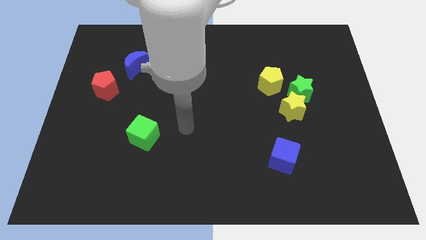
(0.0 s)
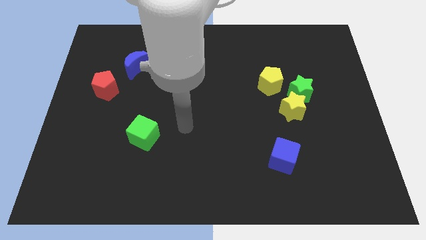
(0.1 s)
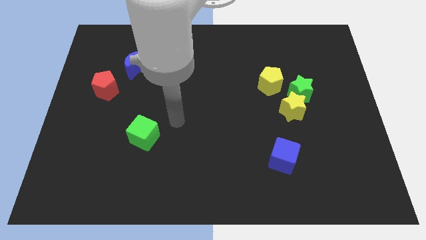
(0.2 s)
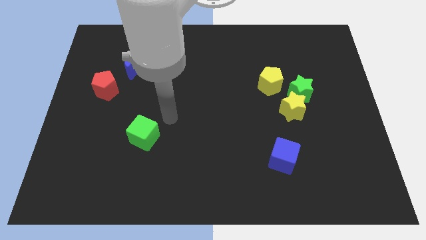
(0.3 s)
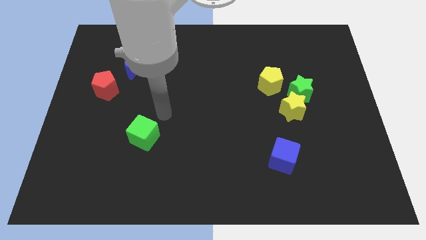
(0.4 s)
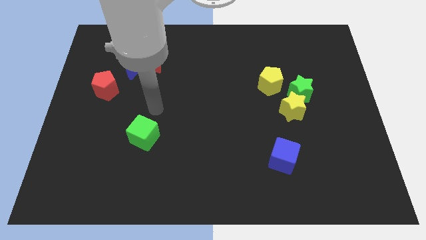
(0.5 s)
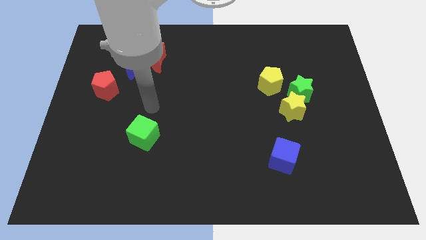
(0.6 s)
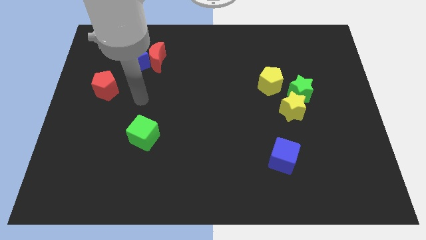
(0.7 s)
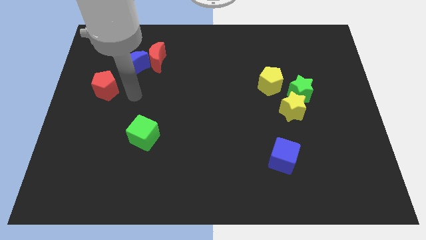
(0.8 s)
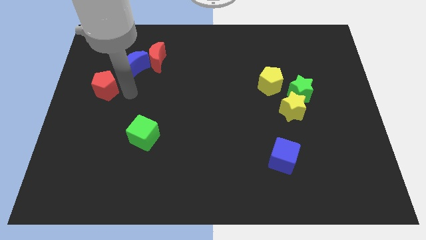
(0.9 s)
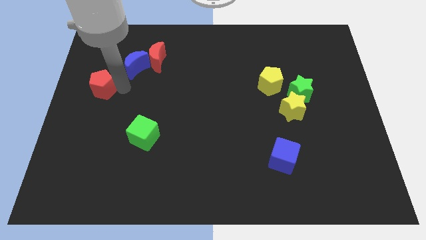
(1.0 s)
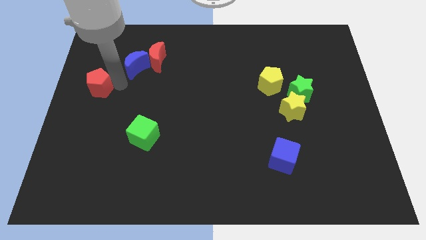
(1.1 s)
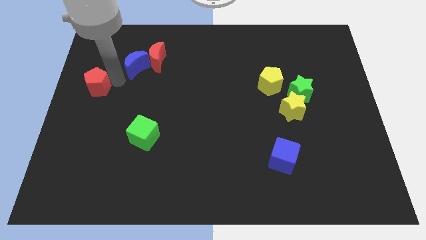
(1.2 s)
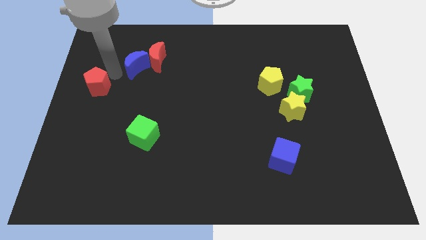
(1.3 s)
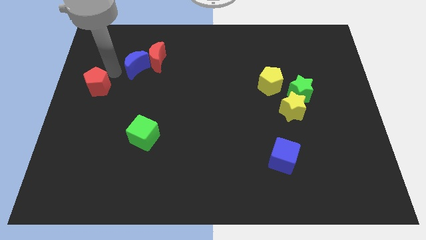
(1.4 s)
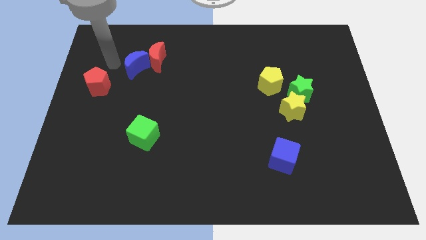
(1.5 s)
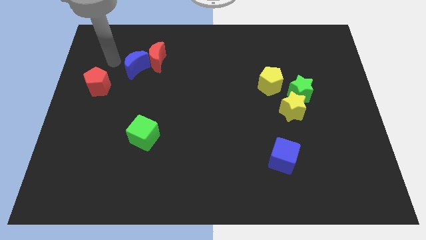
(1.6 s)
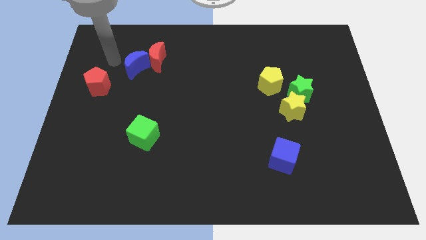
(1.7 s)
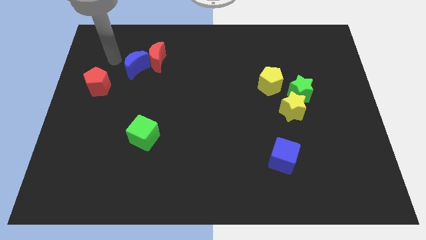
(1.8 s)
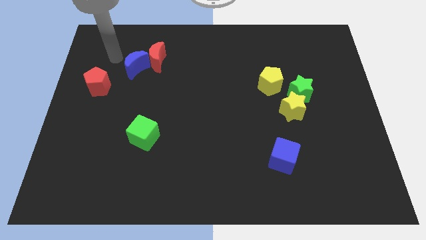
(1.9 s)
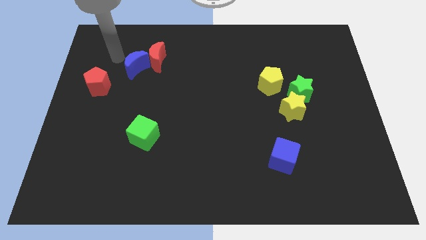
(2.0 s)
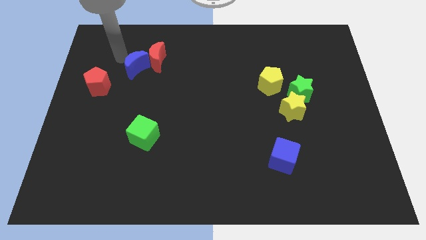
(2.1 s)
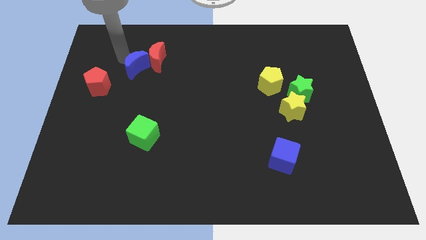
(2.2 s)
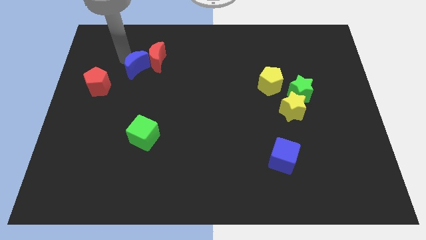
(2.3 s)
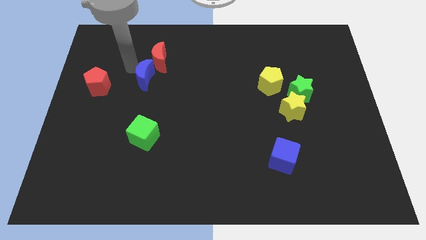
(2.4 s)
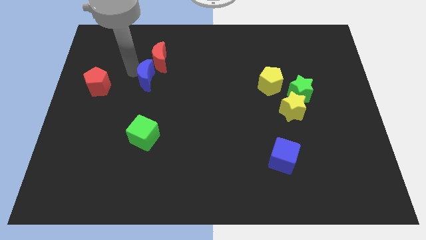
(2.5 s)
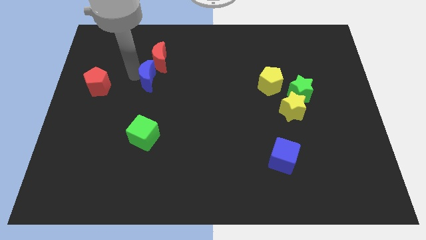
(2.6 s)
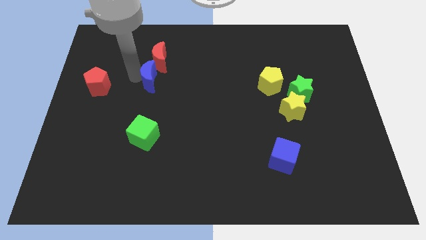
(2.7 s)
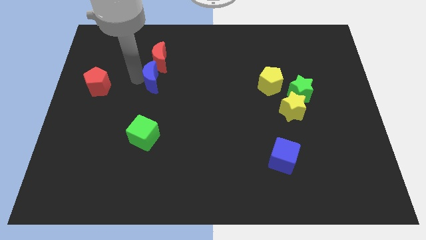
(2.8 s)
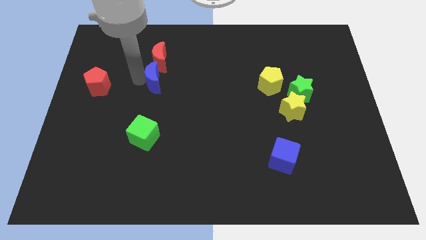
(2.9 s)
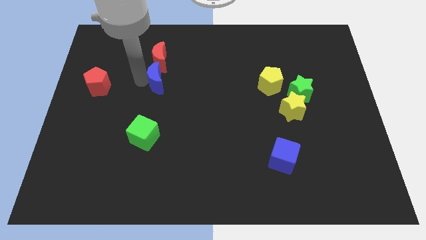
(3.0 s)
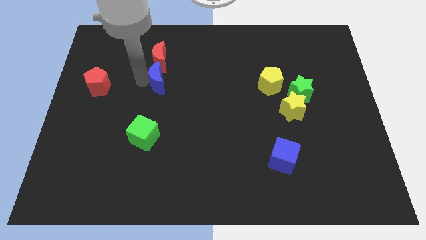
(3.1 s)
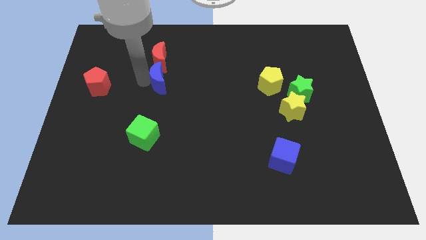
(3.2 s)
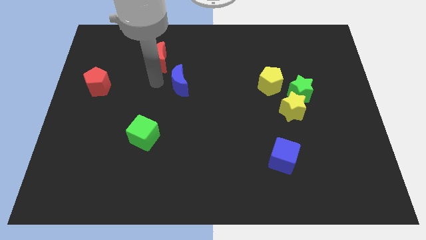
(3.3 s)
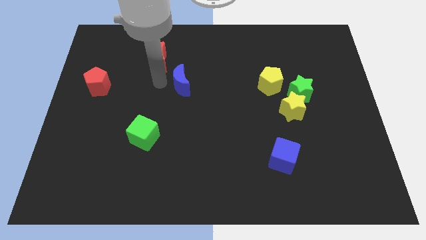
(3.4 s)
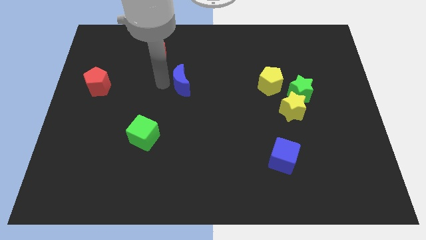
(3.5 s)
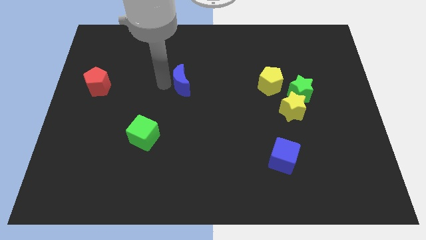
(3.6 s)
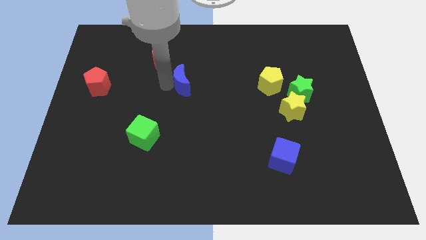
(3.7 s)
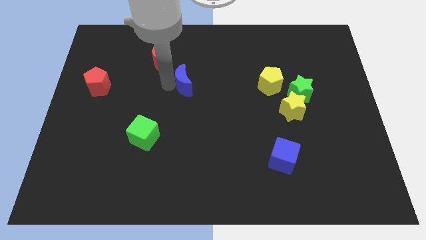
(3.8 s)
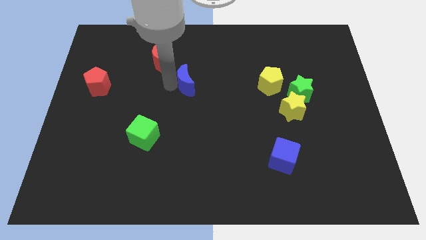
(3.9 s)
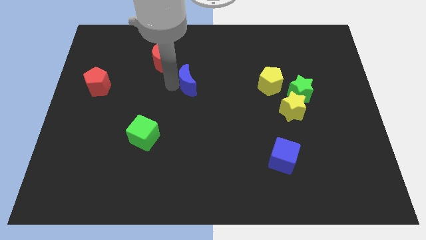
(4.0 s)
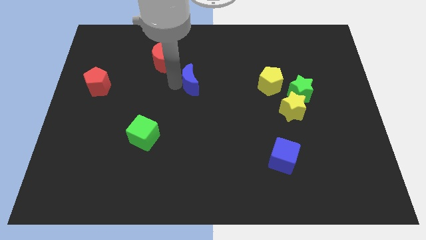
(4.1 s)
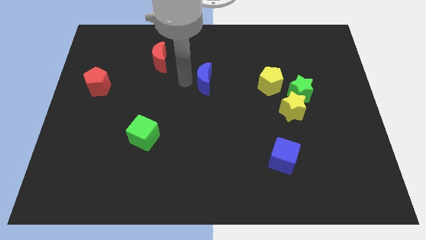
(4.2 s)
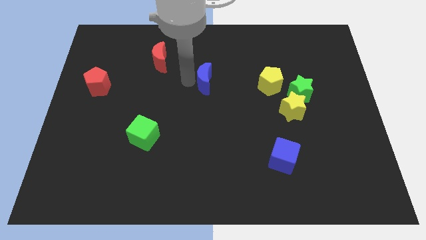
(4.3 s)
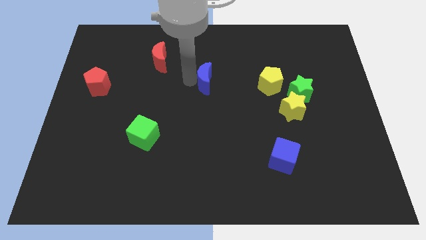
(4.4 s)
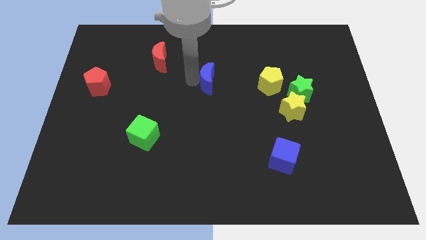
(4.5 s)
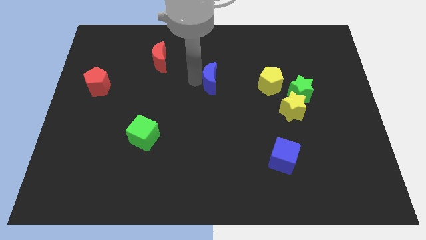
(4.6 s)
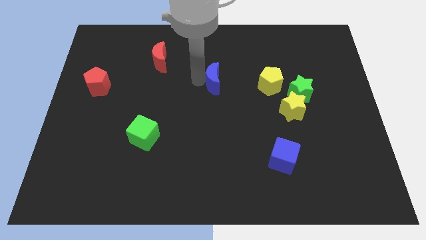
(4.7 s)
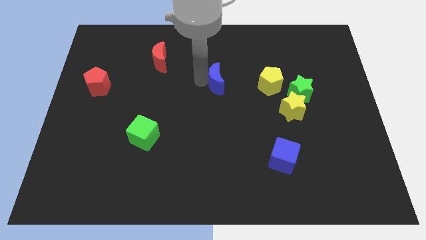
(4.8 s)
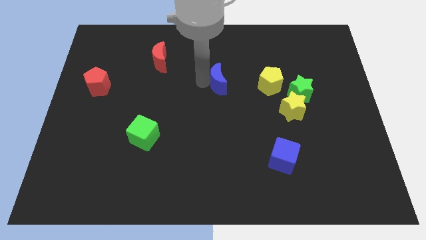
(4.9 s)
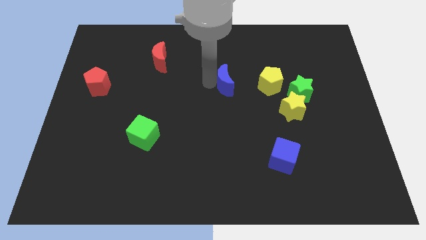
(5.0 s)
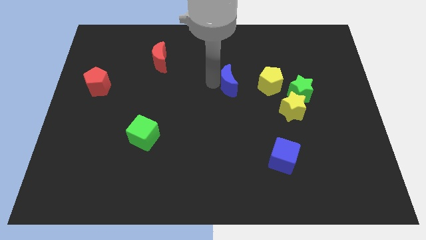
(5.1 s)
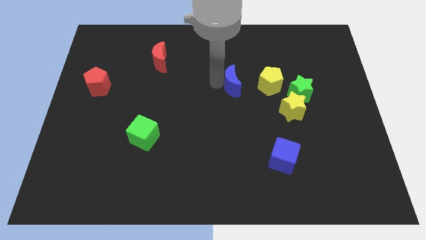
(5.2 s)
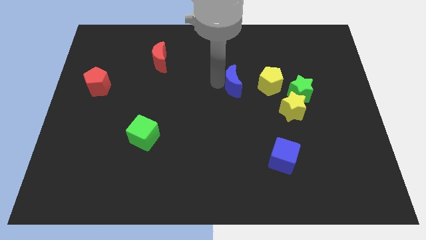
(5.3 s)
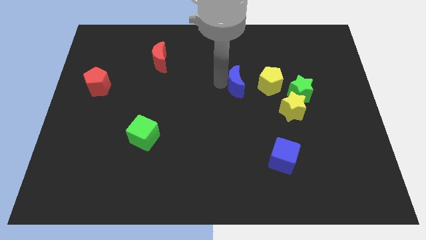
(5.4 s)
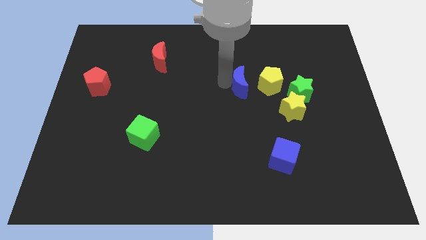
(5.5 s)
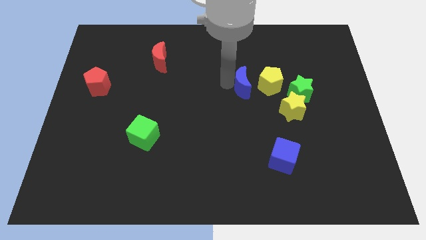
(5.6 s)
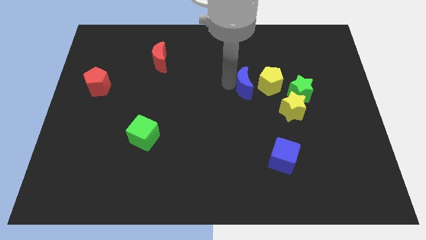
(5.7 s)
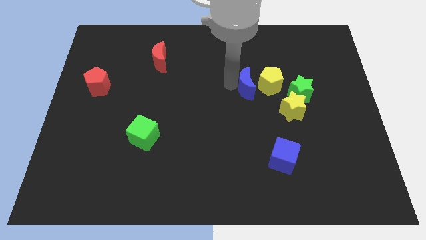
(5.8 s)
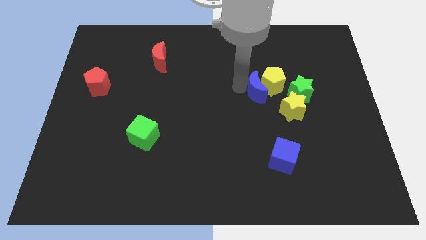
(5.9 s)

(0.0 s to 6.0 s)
move the blue moon next to the yellow pentagon

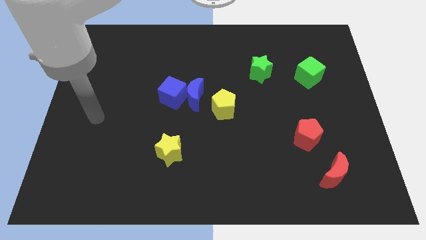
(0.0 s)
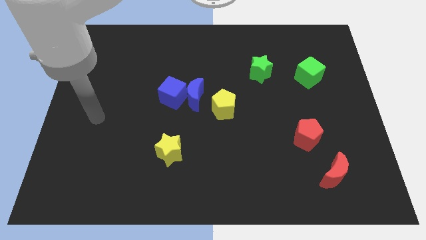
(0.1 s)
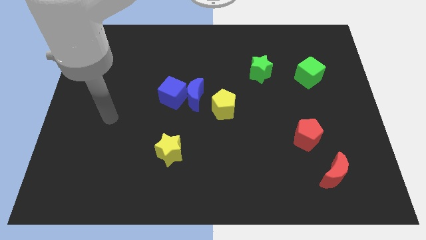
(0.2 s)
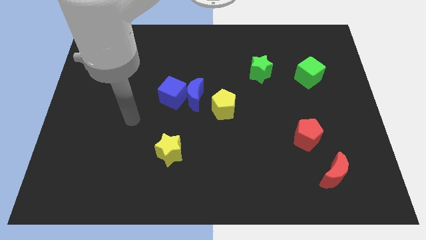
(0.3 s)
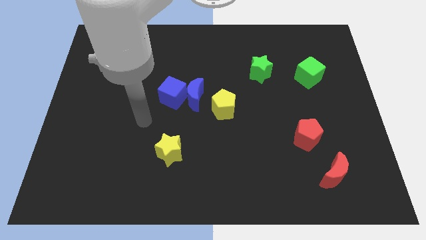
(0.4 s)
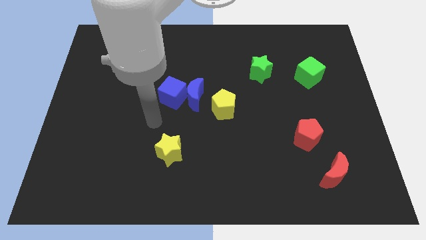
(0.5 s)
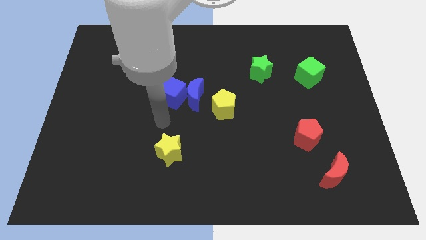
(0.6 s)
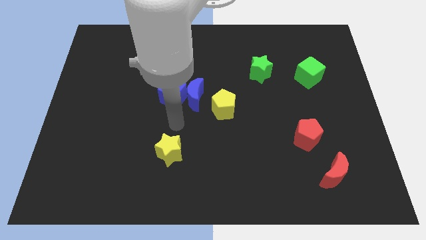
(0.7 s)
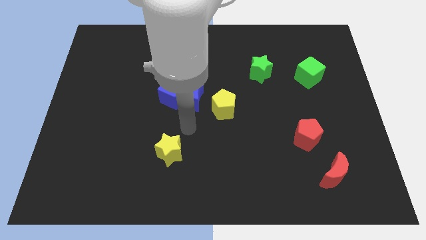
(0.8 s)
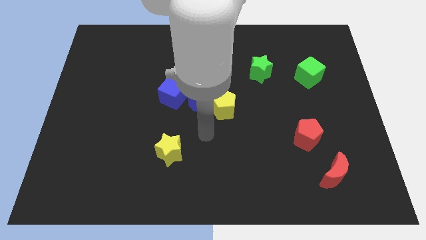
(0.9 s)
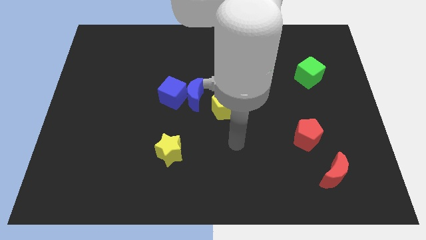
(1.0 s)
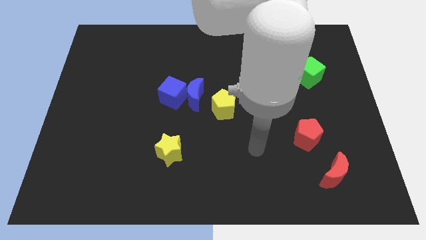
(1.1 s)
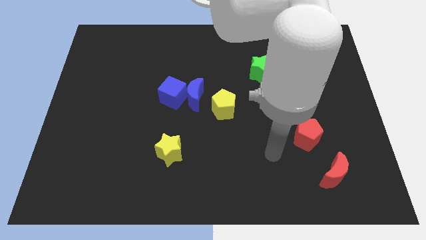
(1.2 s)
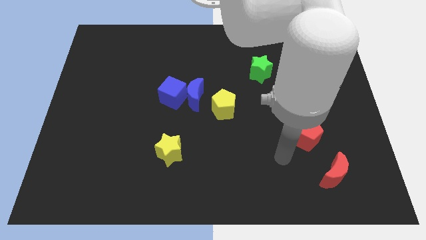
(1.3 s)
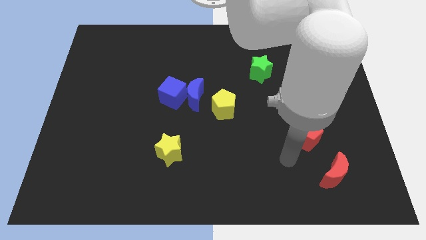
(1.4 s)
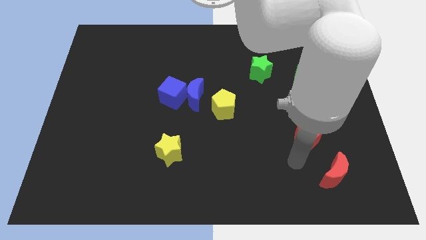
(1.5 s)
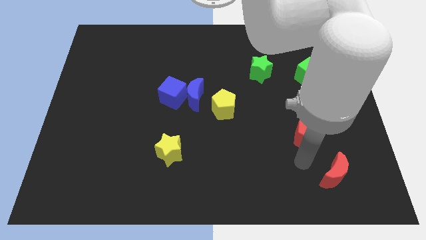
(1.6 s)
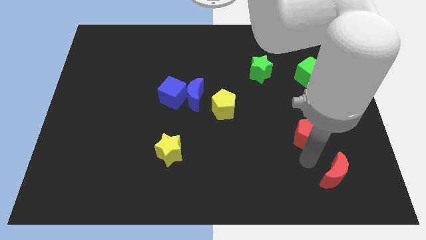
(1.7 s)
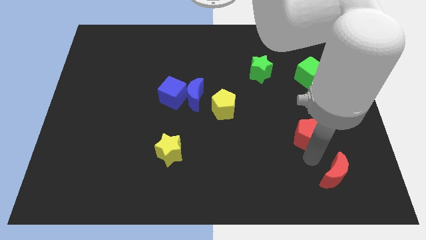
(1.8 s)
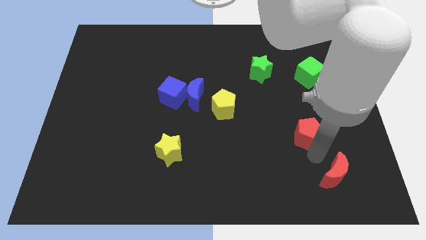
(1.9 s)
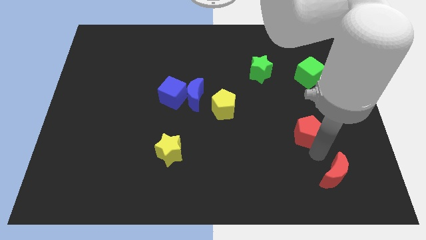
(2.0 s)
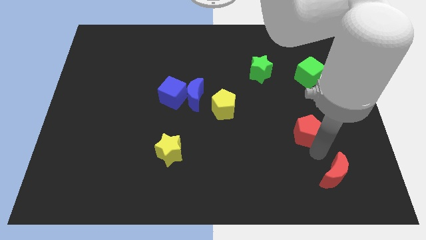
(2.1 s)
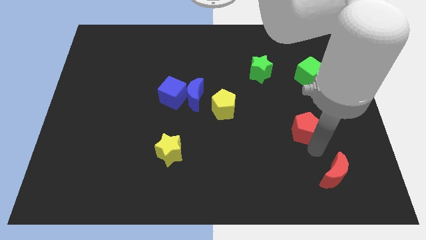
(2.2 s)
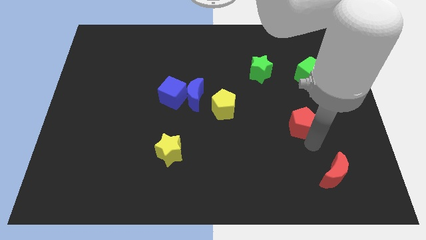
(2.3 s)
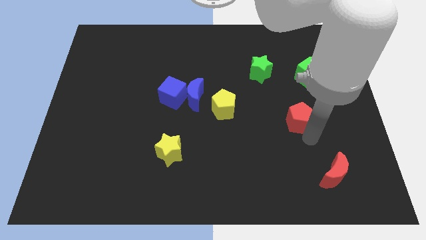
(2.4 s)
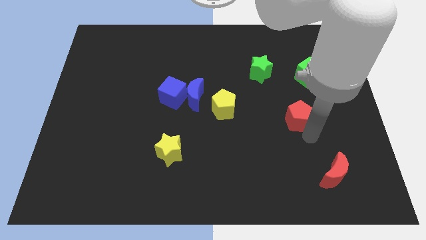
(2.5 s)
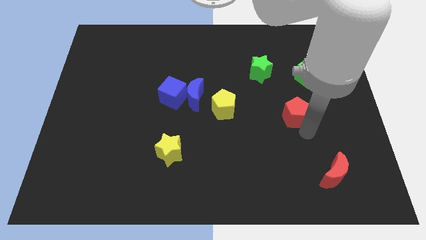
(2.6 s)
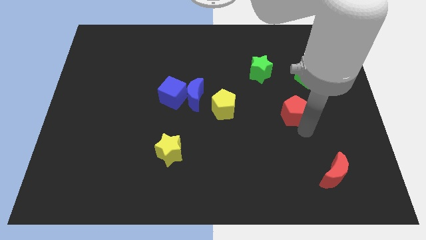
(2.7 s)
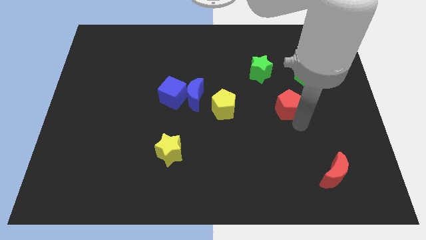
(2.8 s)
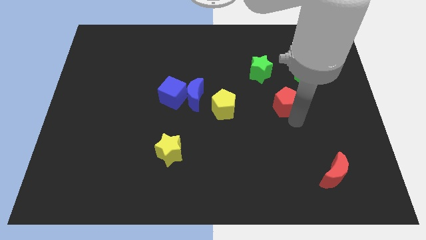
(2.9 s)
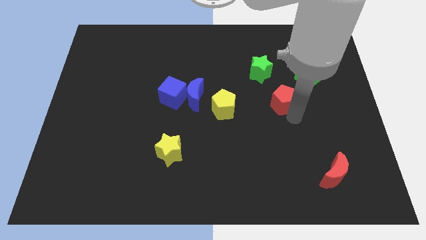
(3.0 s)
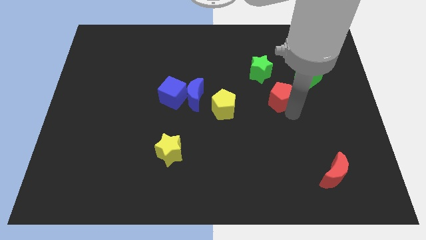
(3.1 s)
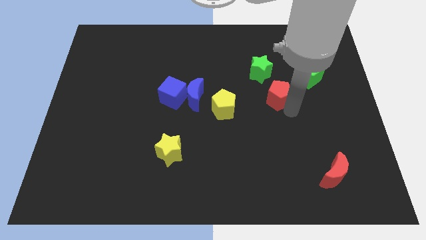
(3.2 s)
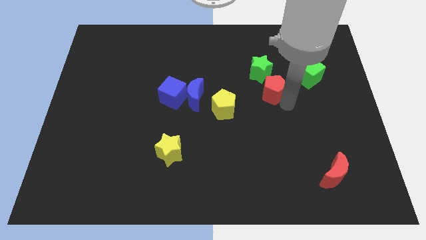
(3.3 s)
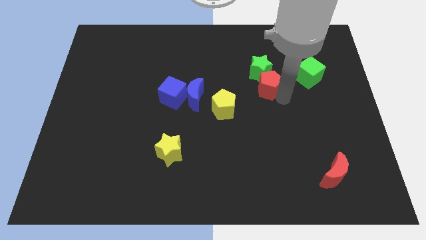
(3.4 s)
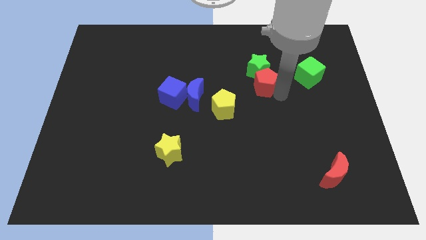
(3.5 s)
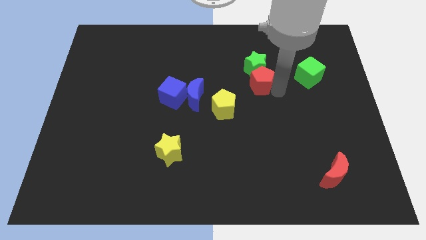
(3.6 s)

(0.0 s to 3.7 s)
slide the red pentagon close to the green star
